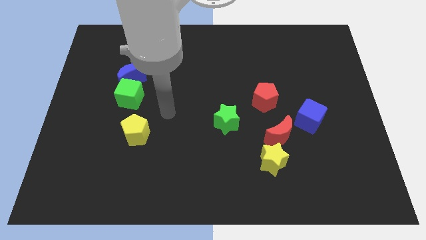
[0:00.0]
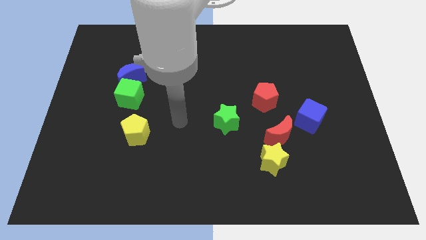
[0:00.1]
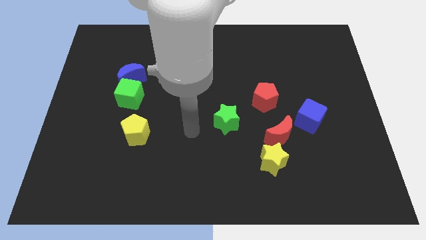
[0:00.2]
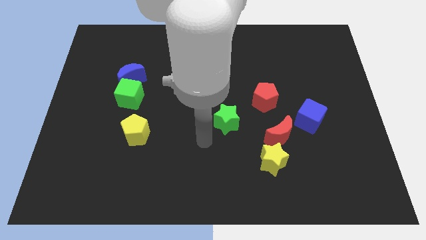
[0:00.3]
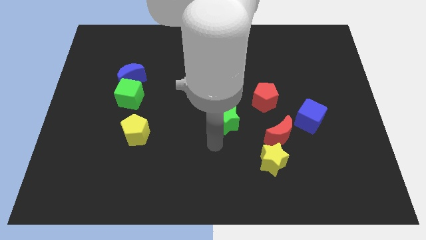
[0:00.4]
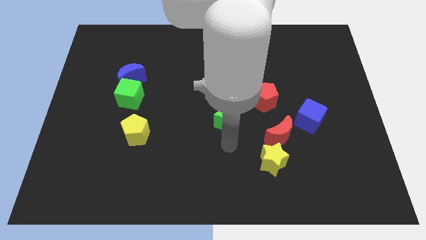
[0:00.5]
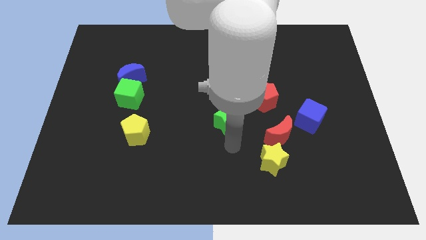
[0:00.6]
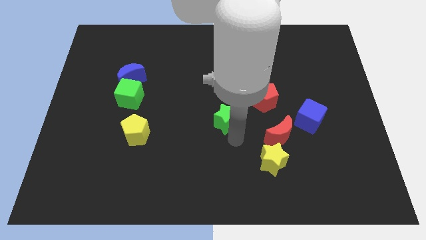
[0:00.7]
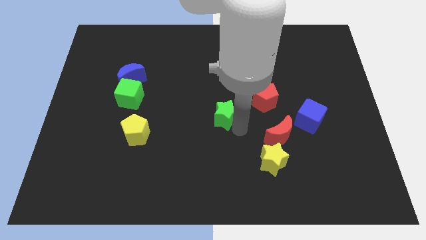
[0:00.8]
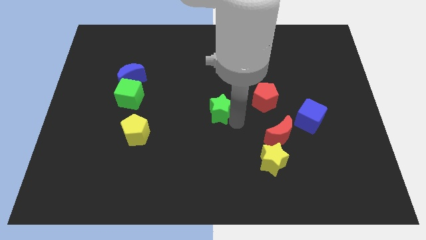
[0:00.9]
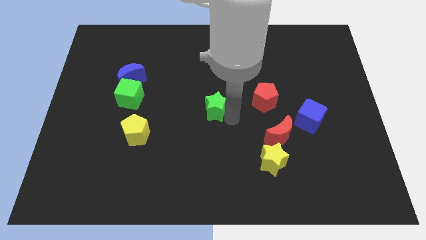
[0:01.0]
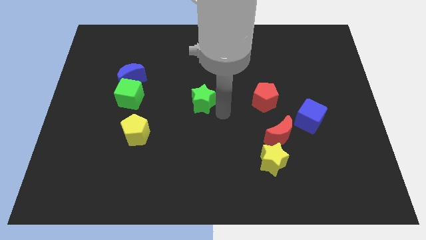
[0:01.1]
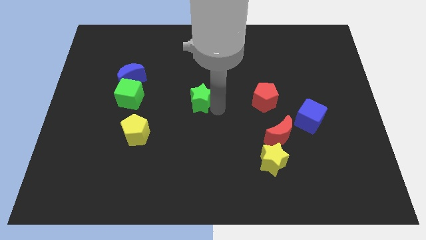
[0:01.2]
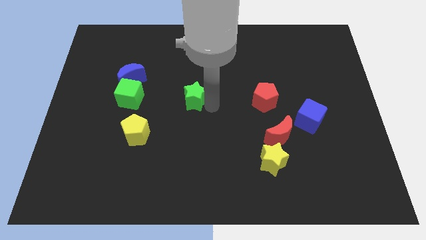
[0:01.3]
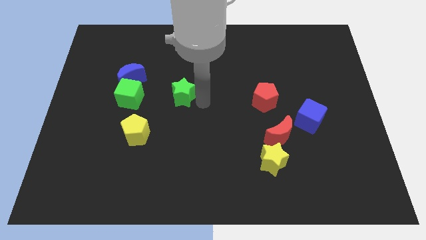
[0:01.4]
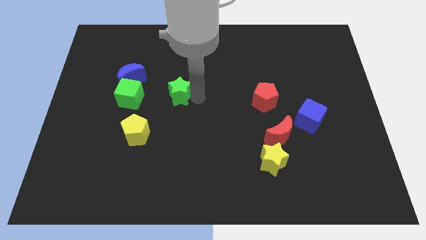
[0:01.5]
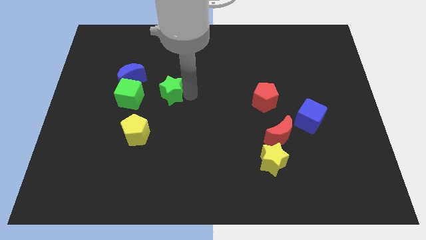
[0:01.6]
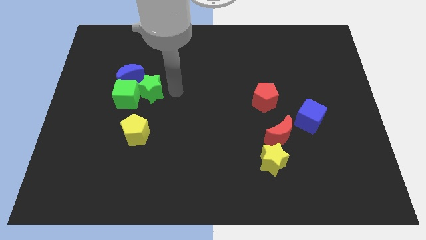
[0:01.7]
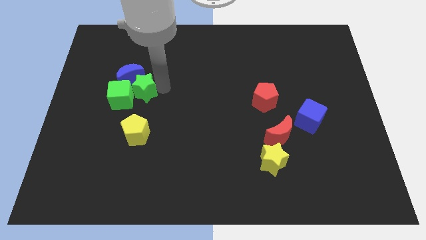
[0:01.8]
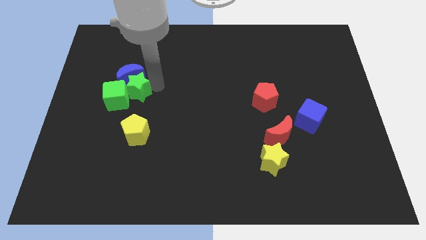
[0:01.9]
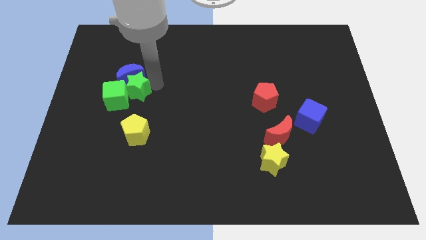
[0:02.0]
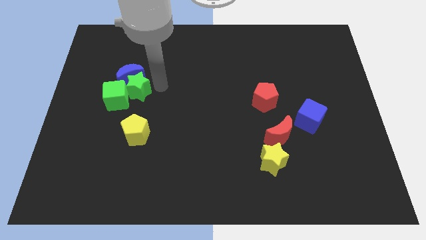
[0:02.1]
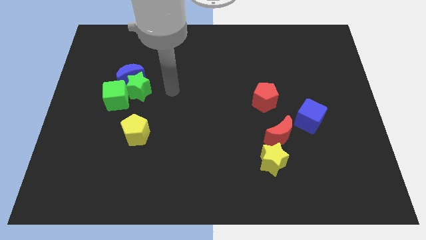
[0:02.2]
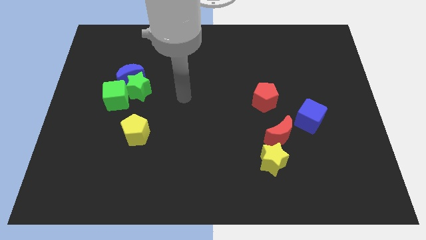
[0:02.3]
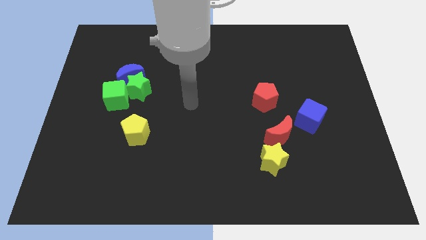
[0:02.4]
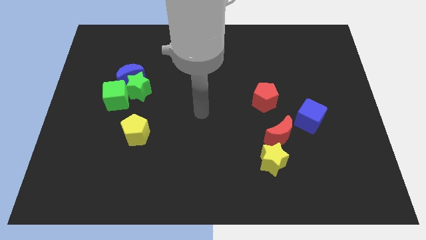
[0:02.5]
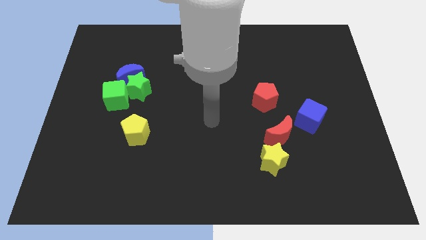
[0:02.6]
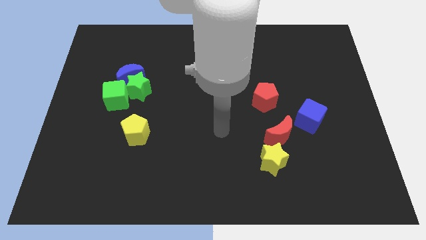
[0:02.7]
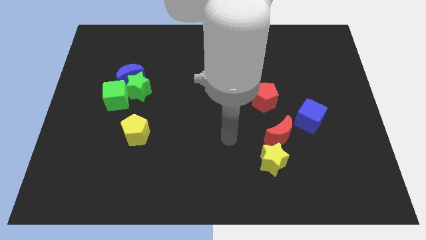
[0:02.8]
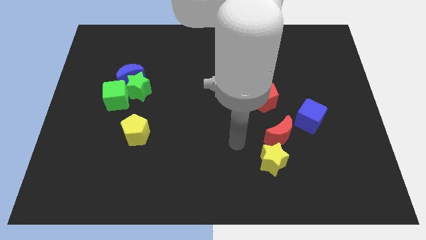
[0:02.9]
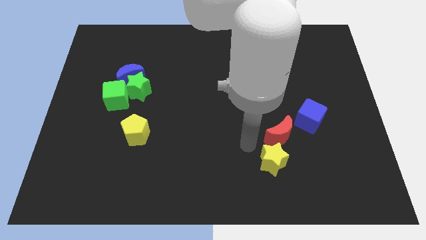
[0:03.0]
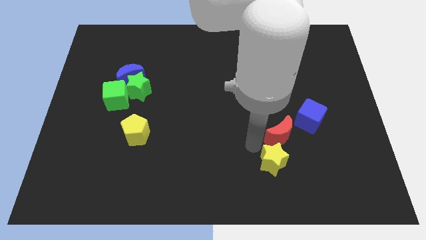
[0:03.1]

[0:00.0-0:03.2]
place the green star below the blue crescent

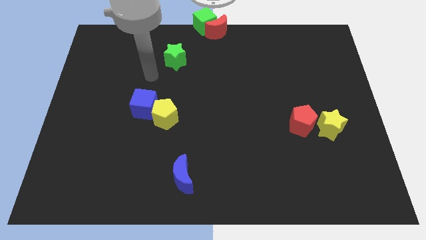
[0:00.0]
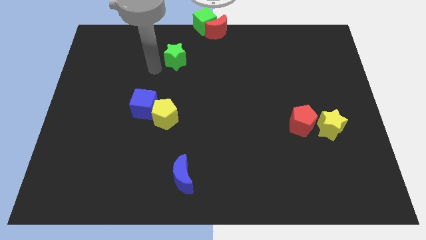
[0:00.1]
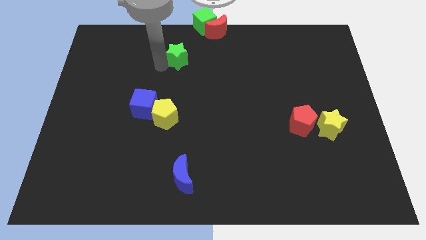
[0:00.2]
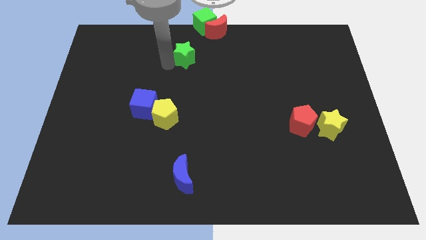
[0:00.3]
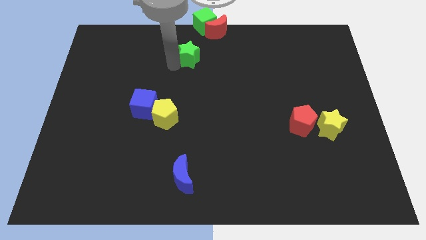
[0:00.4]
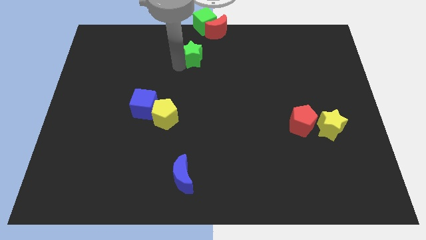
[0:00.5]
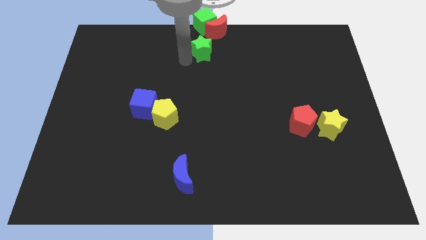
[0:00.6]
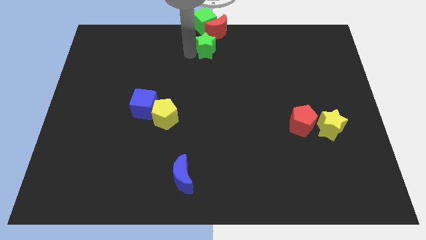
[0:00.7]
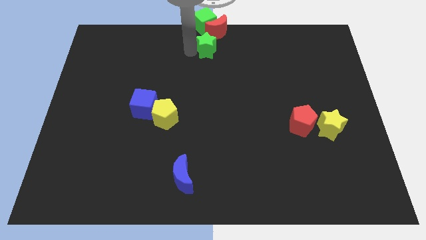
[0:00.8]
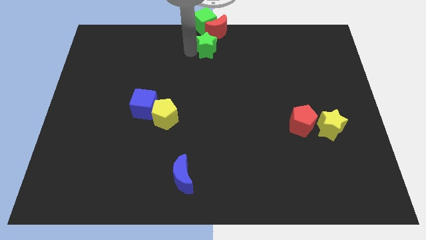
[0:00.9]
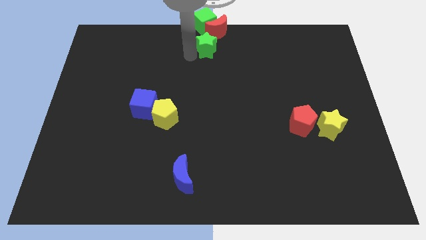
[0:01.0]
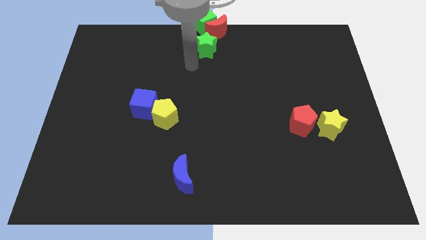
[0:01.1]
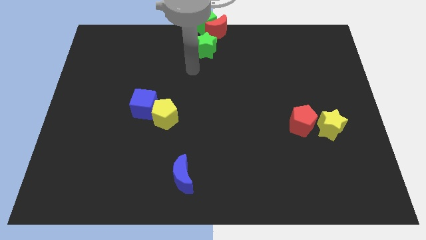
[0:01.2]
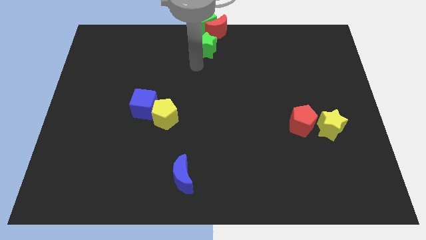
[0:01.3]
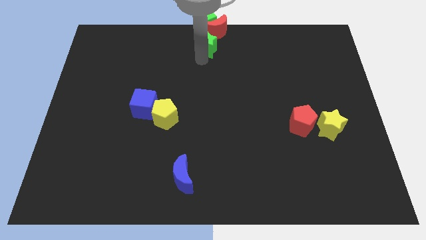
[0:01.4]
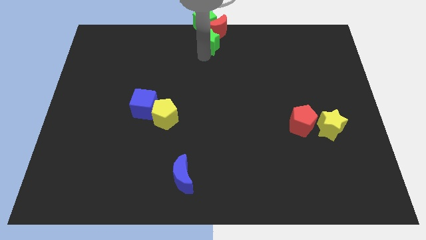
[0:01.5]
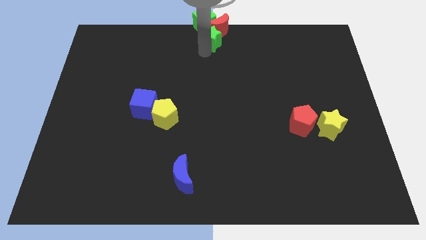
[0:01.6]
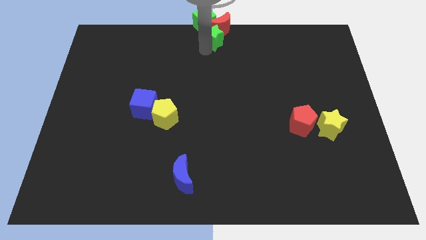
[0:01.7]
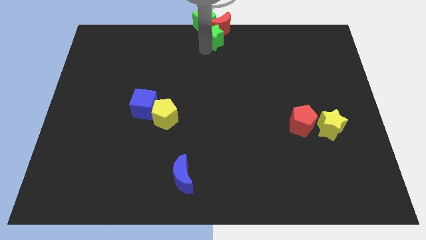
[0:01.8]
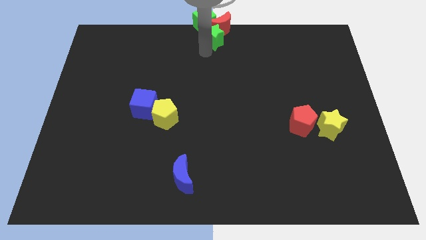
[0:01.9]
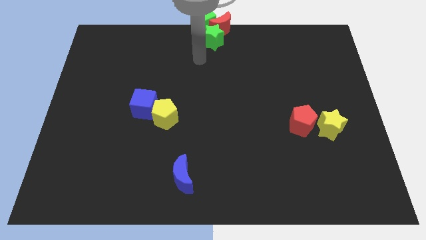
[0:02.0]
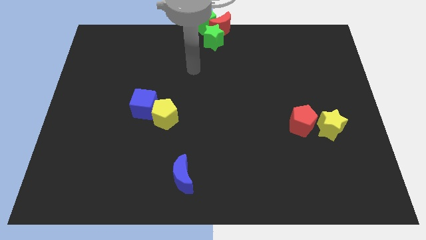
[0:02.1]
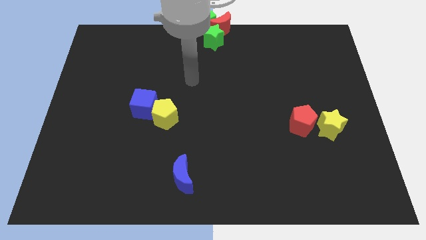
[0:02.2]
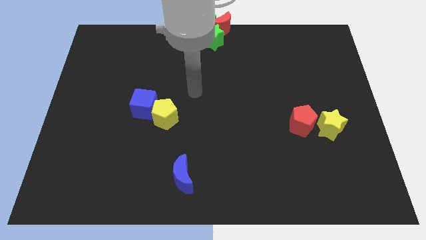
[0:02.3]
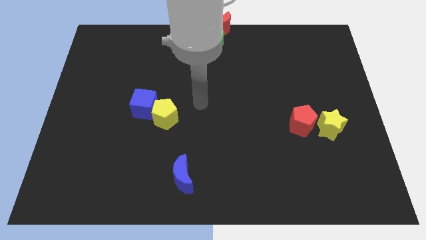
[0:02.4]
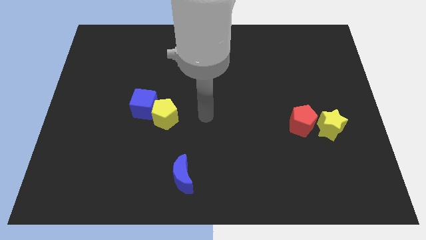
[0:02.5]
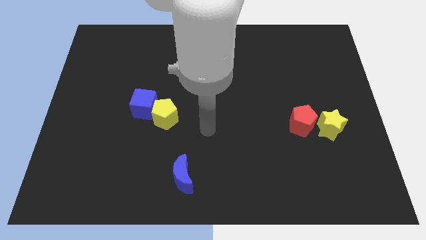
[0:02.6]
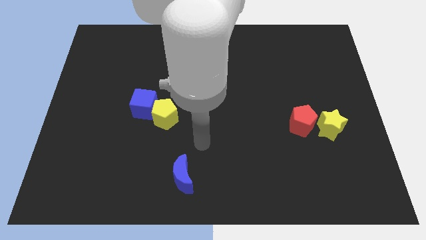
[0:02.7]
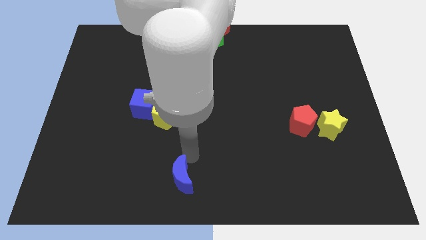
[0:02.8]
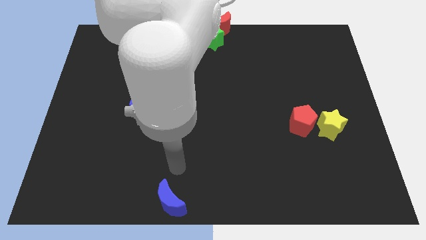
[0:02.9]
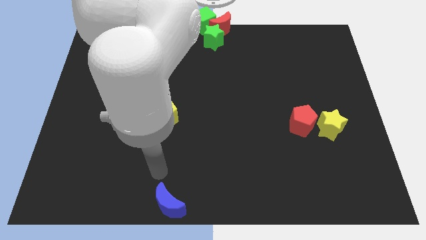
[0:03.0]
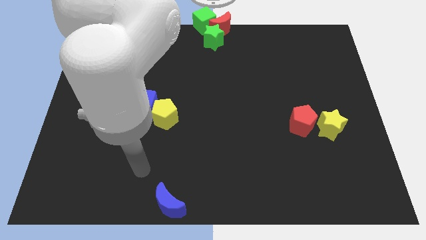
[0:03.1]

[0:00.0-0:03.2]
place the green star at the bottom of the red crescent

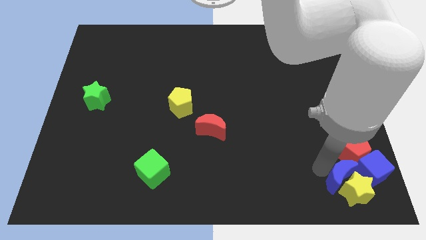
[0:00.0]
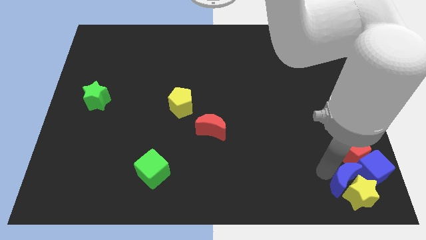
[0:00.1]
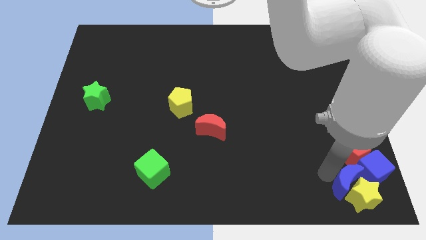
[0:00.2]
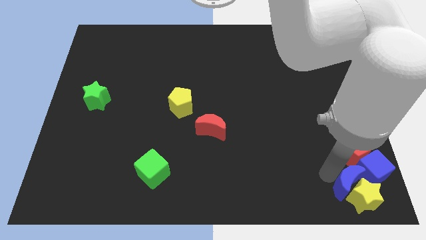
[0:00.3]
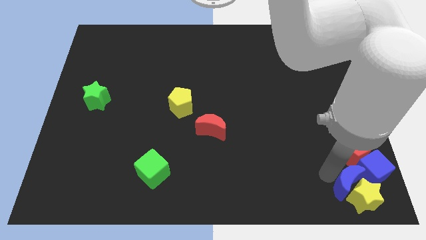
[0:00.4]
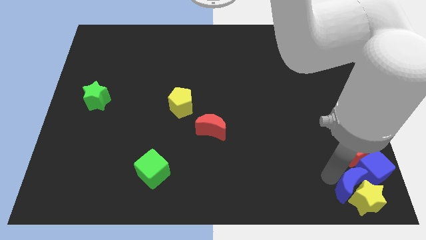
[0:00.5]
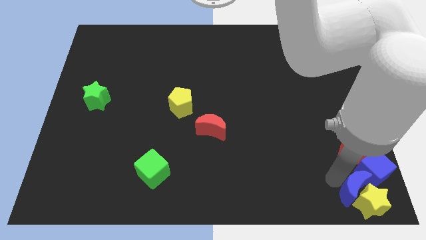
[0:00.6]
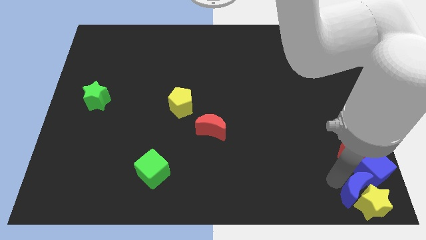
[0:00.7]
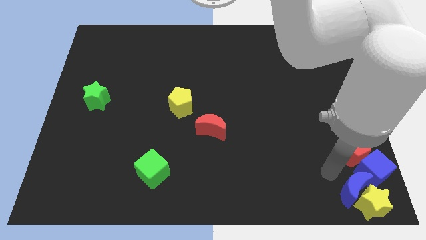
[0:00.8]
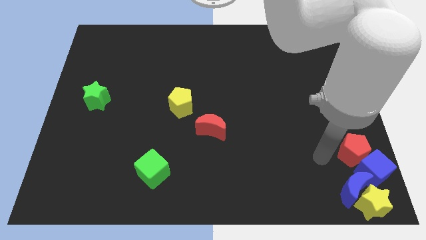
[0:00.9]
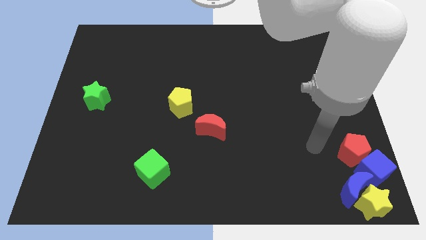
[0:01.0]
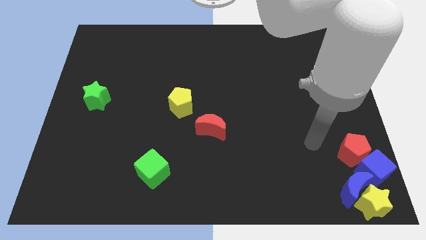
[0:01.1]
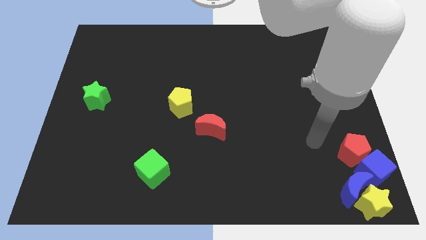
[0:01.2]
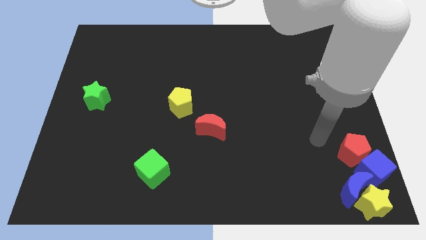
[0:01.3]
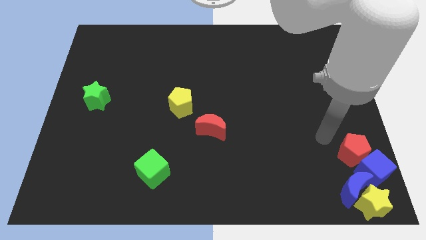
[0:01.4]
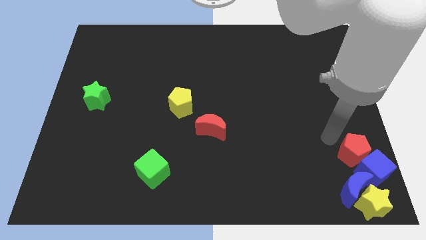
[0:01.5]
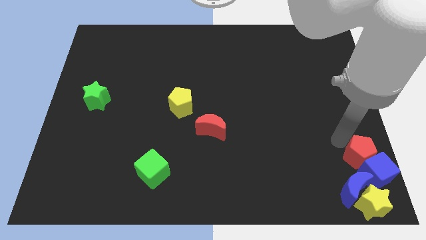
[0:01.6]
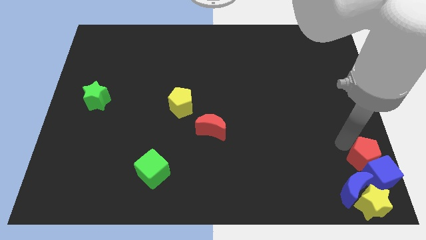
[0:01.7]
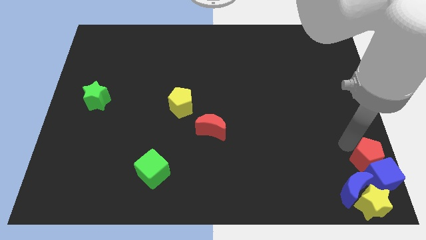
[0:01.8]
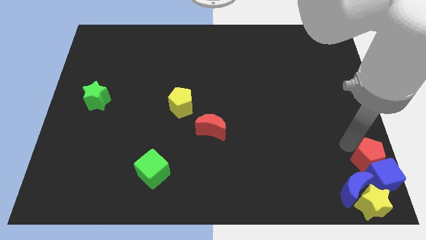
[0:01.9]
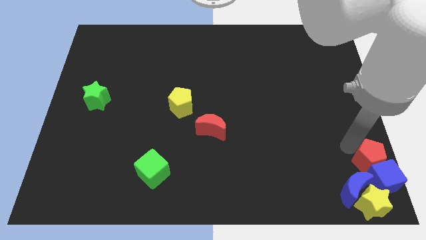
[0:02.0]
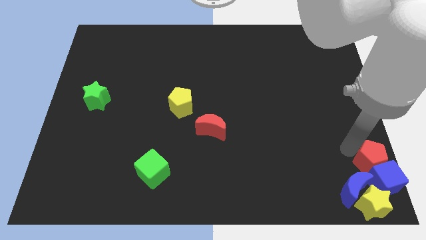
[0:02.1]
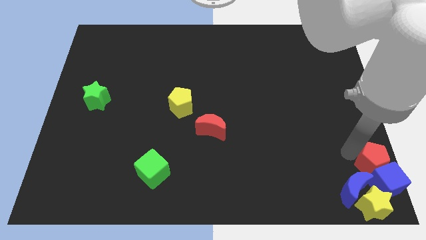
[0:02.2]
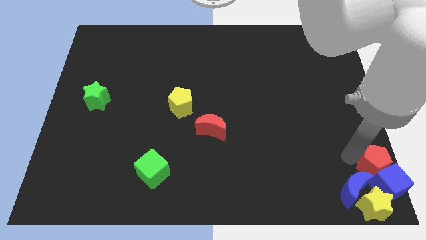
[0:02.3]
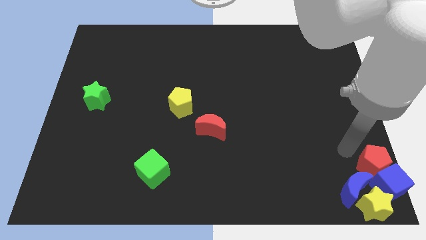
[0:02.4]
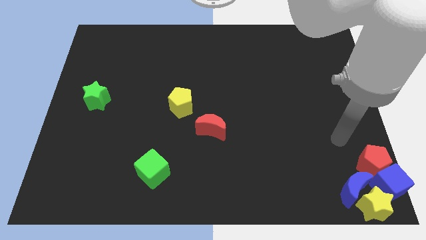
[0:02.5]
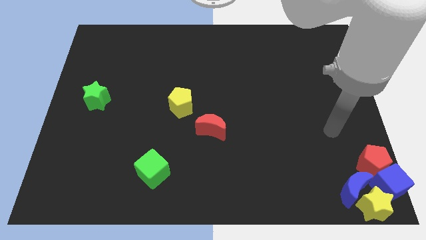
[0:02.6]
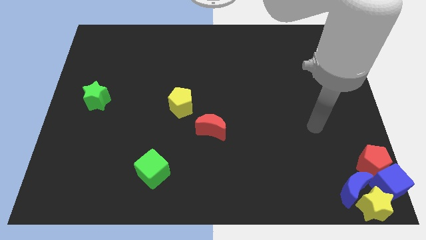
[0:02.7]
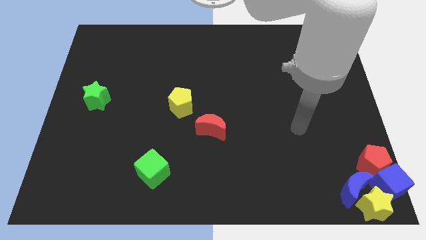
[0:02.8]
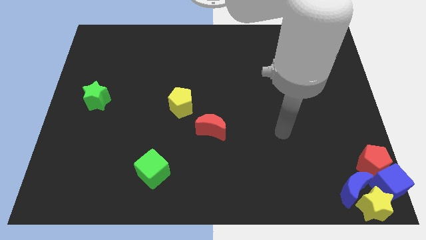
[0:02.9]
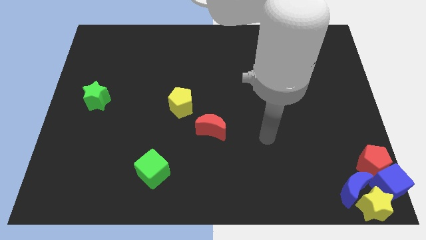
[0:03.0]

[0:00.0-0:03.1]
place your arm in between the red crescent and red pentagon
